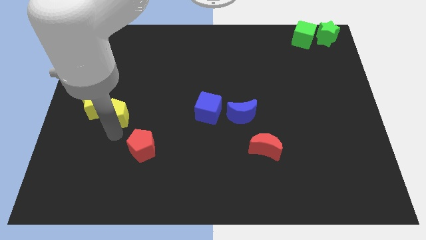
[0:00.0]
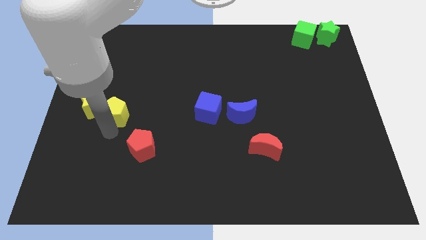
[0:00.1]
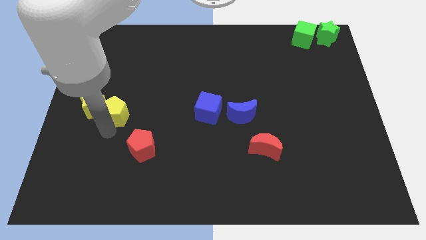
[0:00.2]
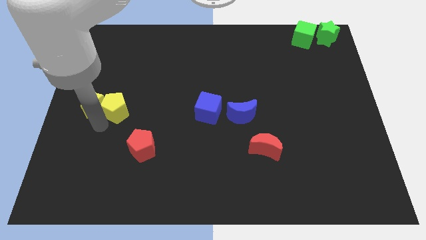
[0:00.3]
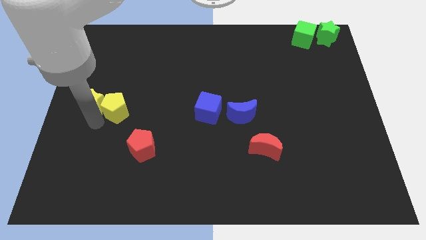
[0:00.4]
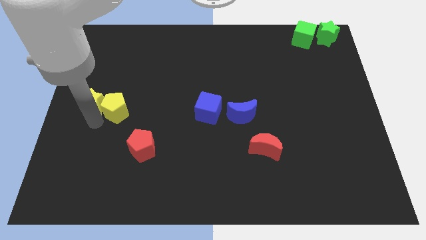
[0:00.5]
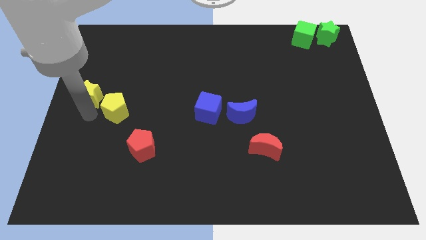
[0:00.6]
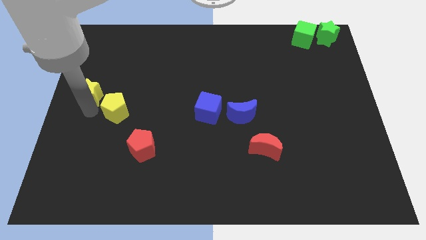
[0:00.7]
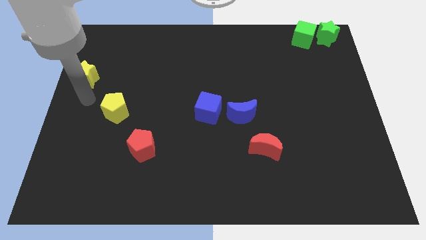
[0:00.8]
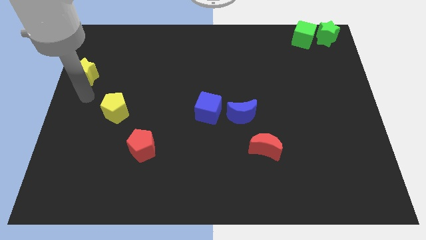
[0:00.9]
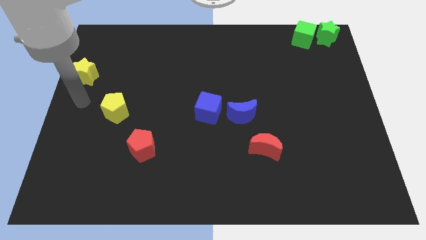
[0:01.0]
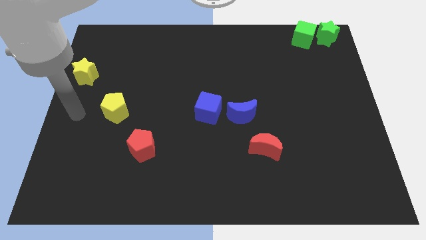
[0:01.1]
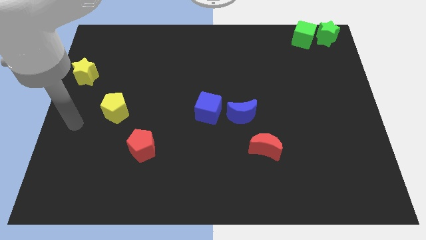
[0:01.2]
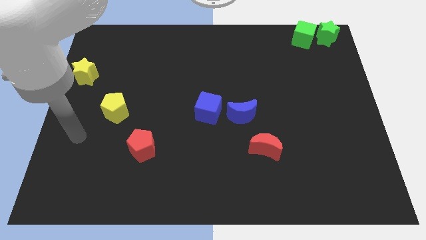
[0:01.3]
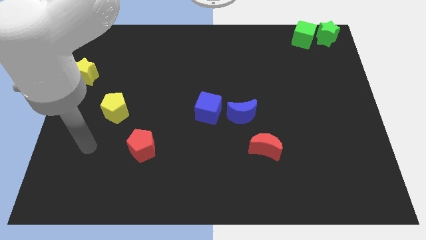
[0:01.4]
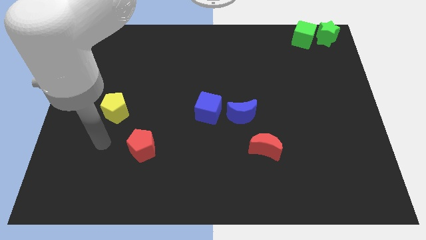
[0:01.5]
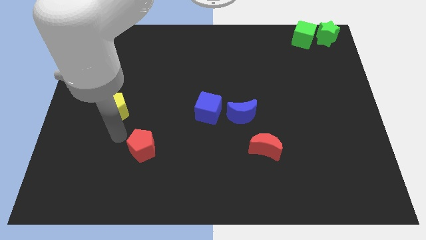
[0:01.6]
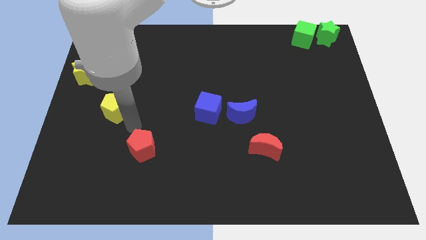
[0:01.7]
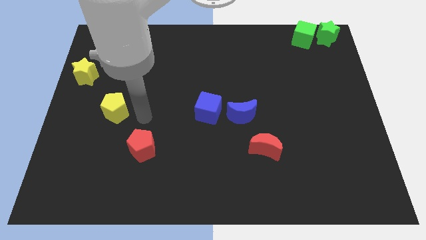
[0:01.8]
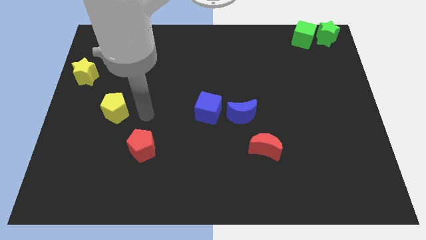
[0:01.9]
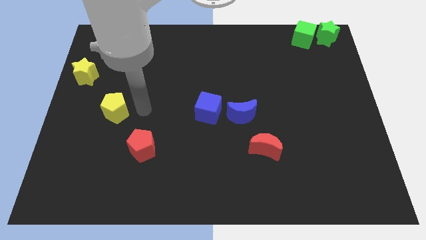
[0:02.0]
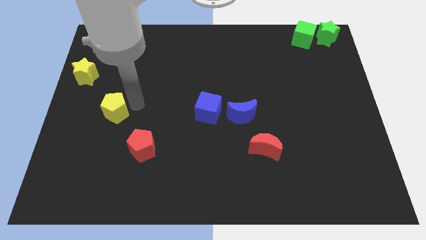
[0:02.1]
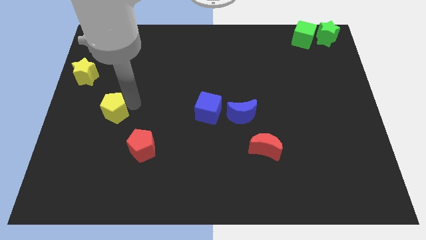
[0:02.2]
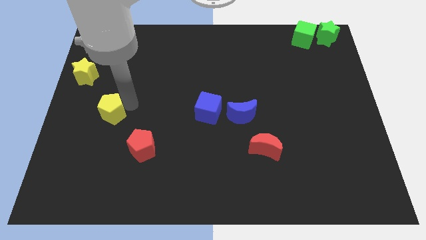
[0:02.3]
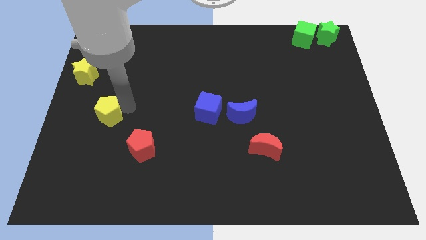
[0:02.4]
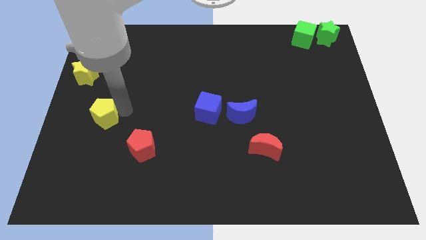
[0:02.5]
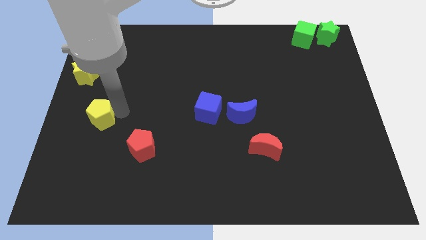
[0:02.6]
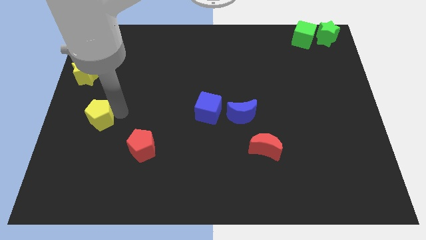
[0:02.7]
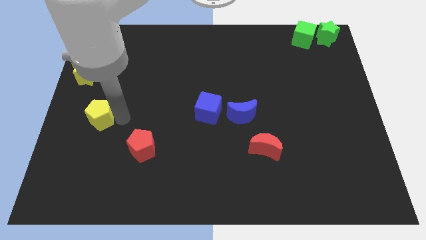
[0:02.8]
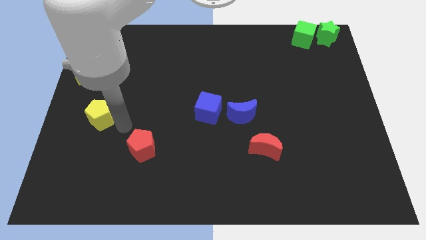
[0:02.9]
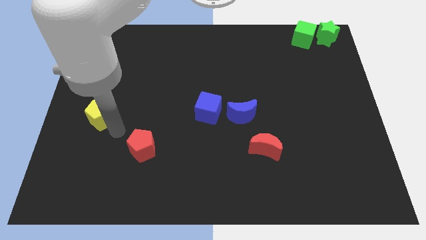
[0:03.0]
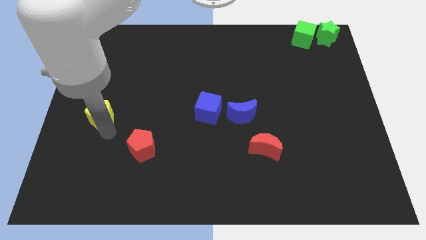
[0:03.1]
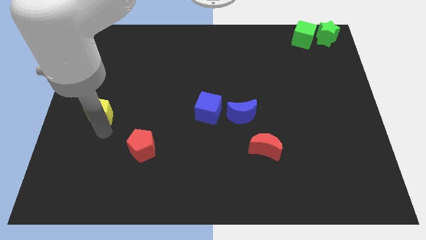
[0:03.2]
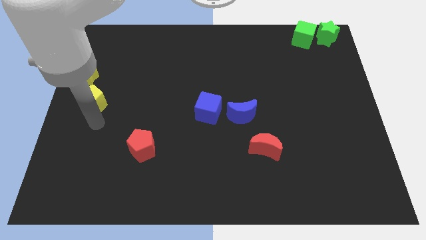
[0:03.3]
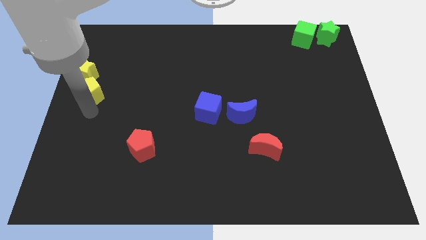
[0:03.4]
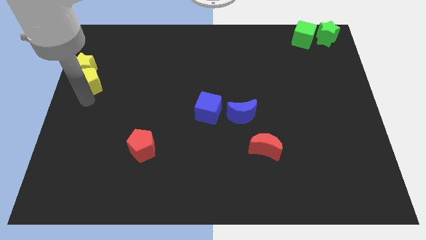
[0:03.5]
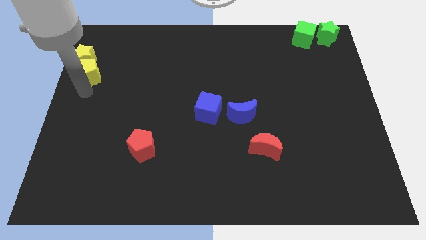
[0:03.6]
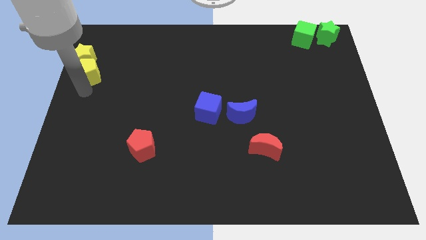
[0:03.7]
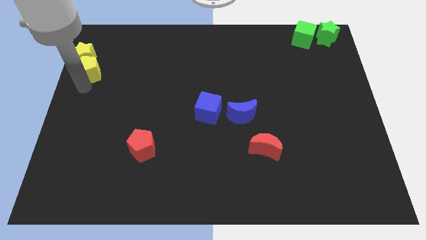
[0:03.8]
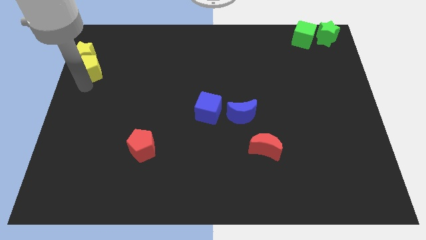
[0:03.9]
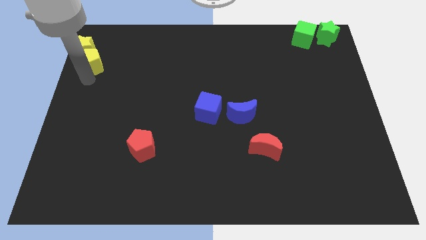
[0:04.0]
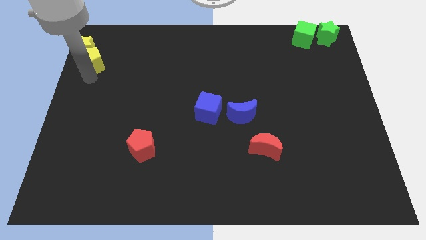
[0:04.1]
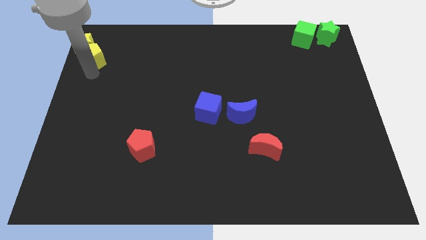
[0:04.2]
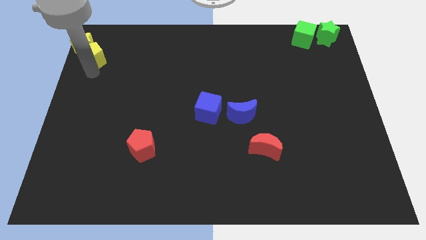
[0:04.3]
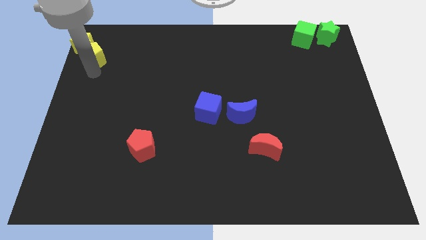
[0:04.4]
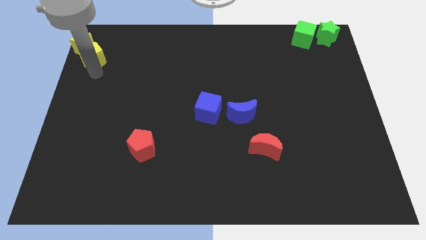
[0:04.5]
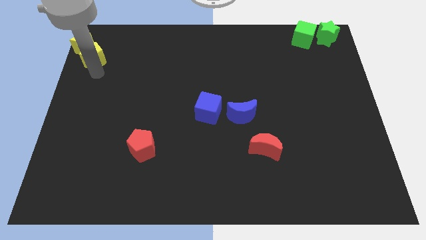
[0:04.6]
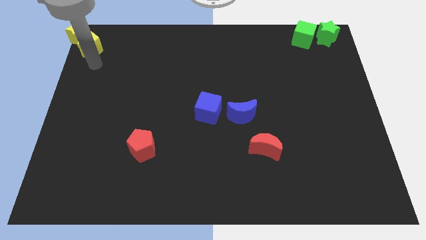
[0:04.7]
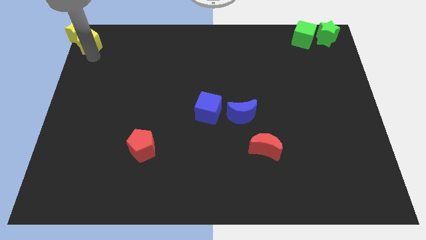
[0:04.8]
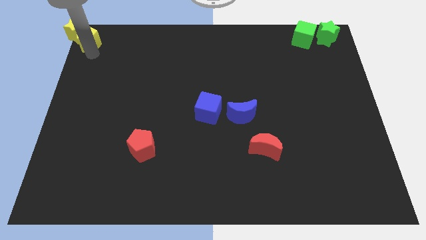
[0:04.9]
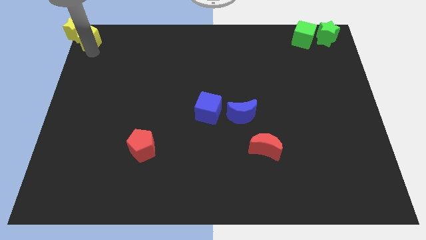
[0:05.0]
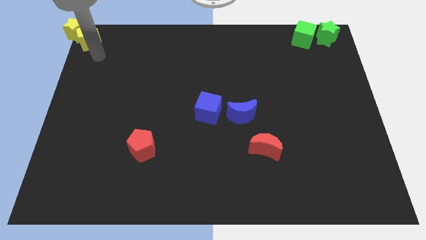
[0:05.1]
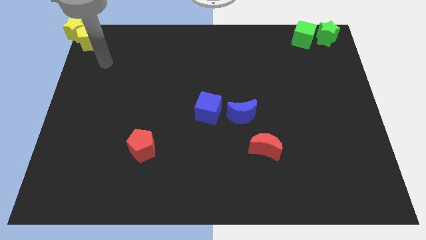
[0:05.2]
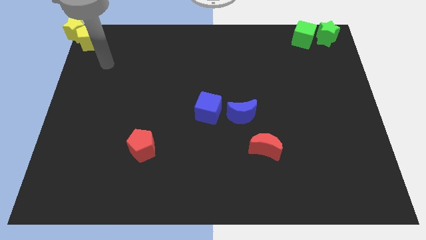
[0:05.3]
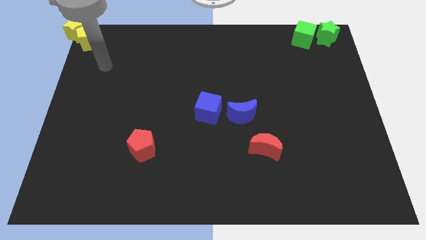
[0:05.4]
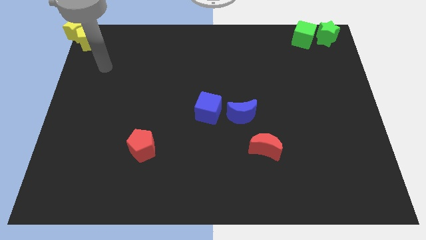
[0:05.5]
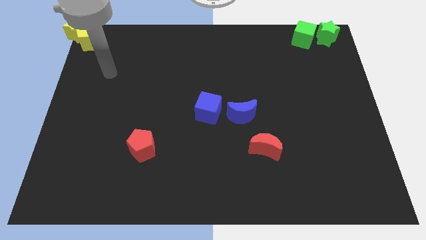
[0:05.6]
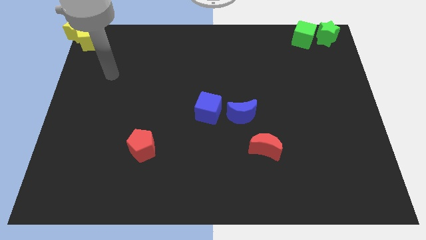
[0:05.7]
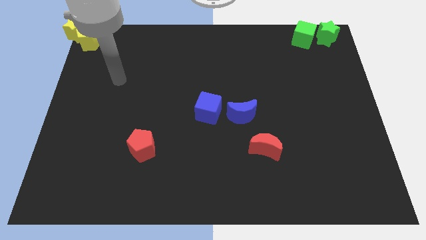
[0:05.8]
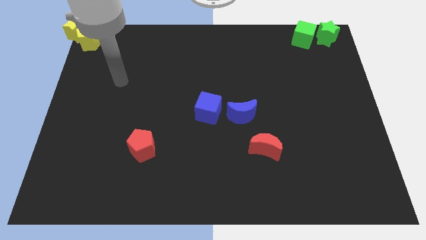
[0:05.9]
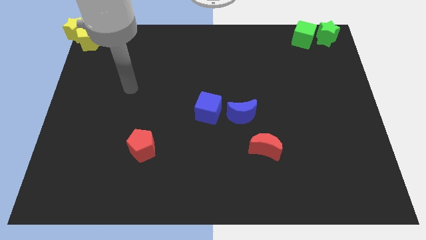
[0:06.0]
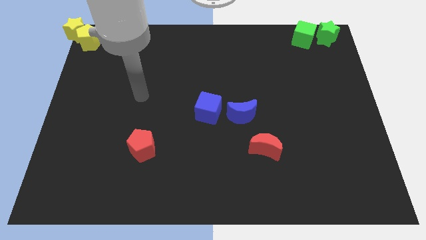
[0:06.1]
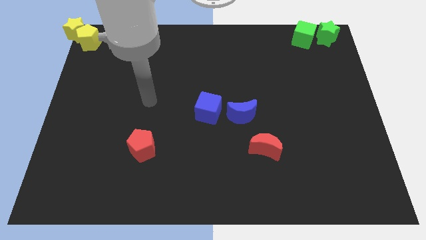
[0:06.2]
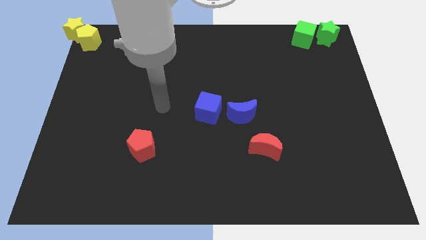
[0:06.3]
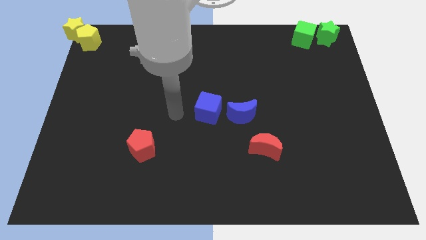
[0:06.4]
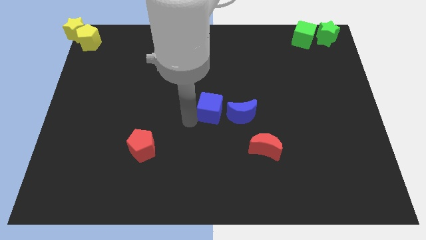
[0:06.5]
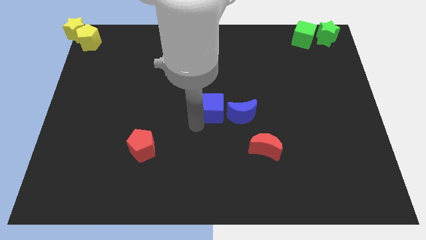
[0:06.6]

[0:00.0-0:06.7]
move yellow blocks to the top left corner of the board

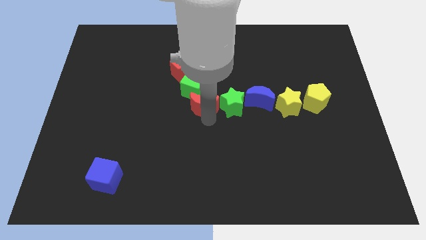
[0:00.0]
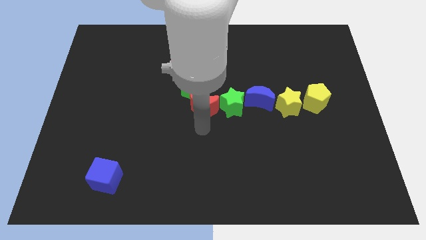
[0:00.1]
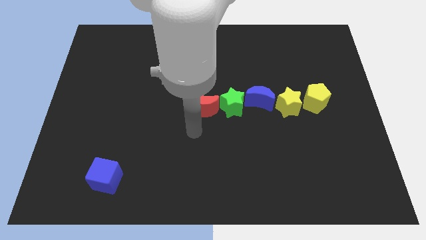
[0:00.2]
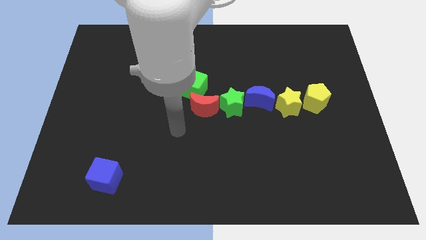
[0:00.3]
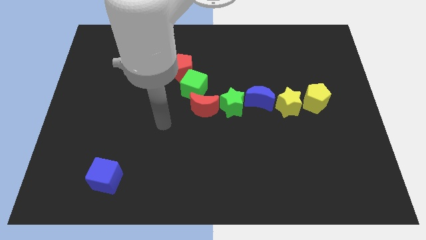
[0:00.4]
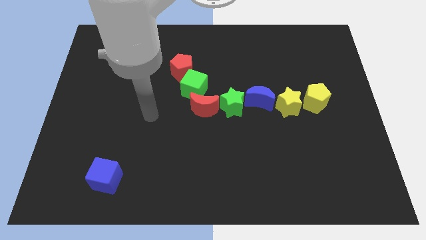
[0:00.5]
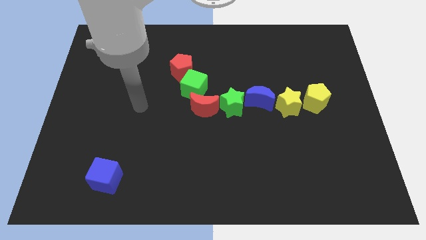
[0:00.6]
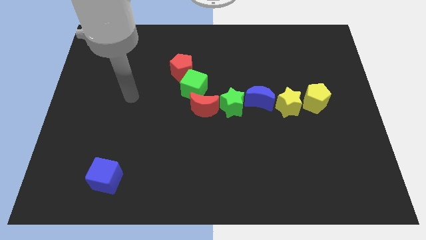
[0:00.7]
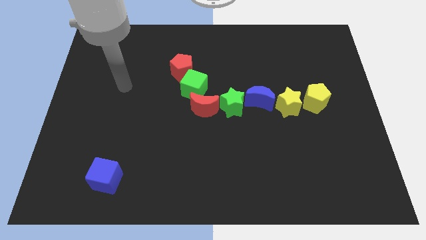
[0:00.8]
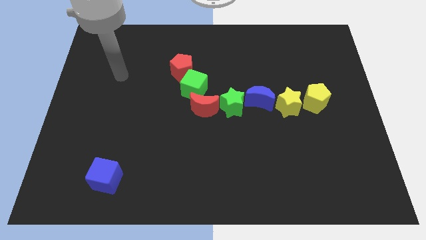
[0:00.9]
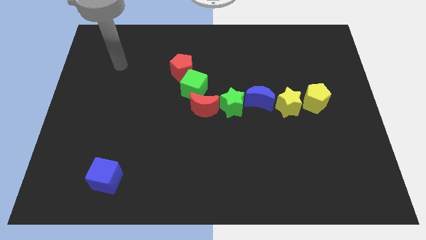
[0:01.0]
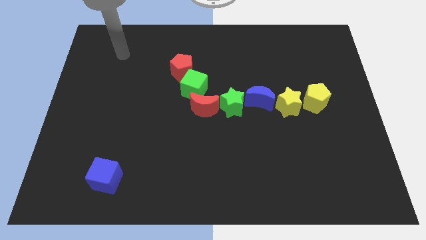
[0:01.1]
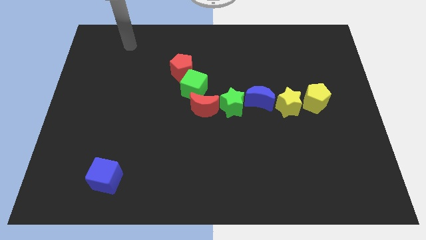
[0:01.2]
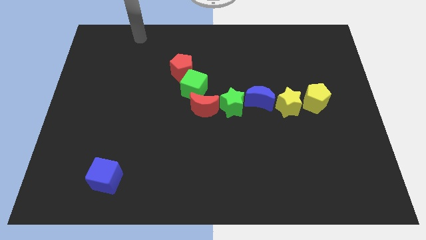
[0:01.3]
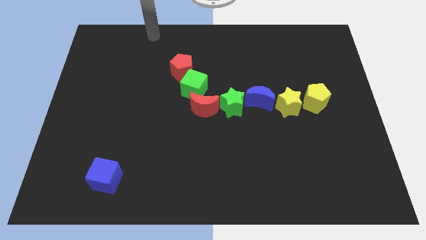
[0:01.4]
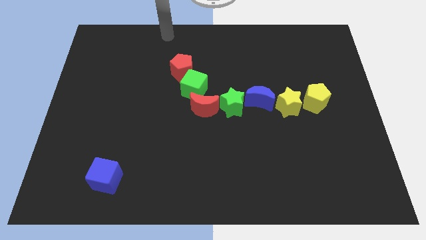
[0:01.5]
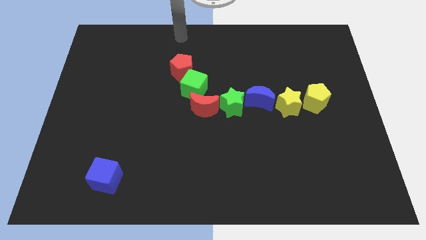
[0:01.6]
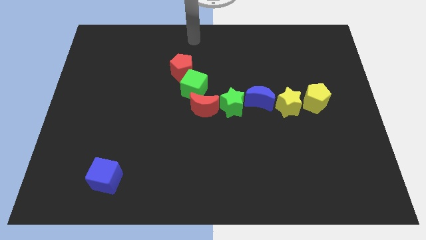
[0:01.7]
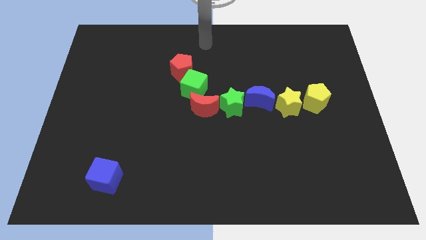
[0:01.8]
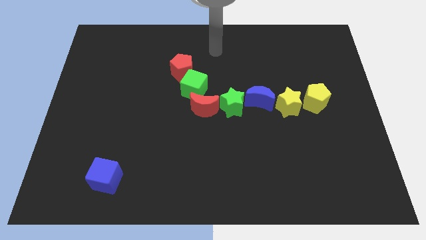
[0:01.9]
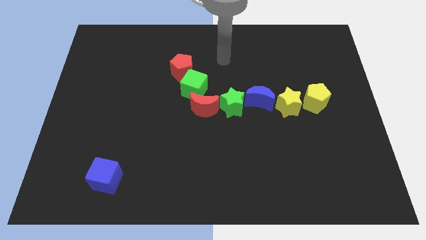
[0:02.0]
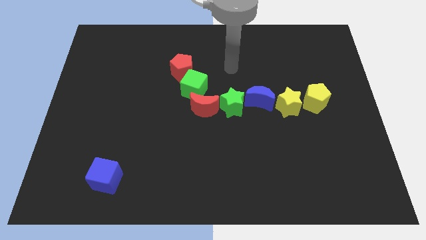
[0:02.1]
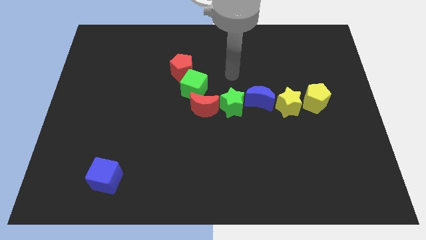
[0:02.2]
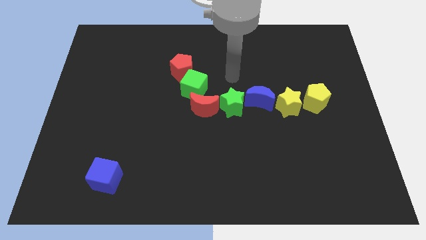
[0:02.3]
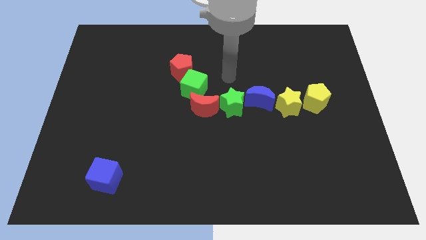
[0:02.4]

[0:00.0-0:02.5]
push your arm above green star
